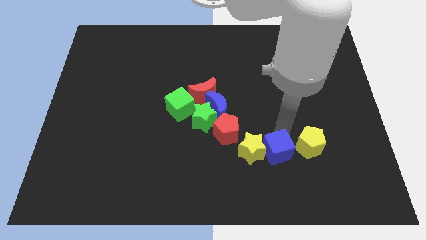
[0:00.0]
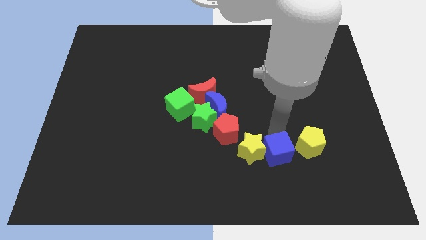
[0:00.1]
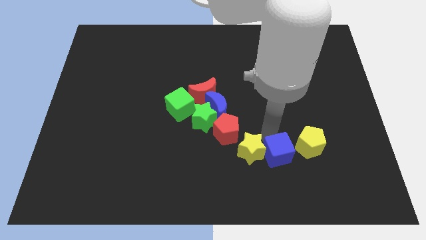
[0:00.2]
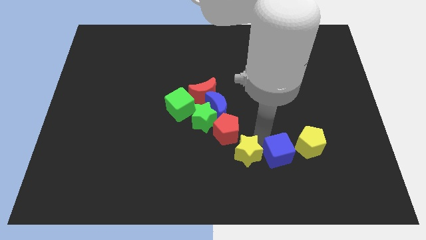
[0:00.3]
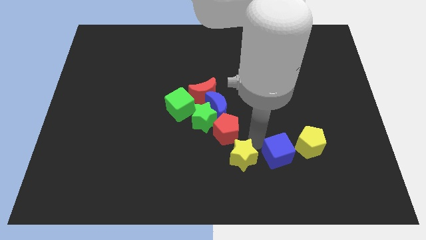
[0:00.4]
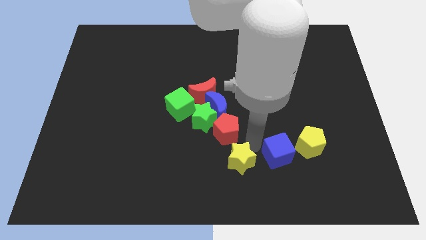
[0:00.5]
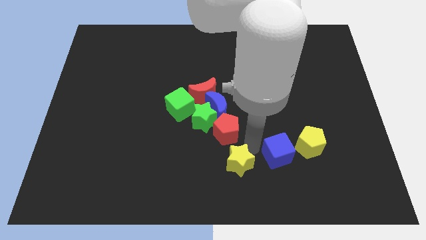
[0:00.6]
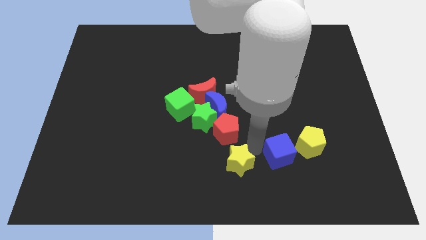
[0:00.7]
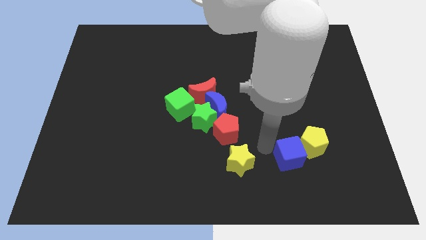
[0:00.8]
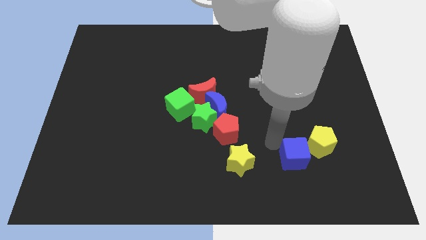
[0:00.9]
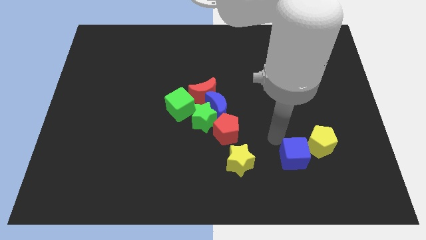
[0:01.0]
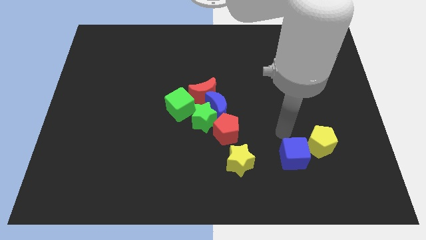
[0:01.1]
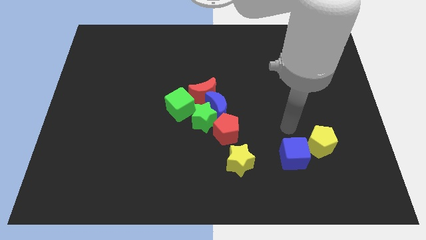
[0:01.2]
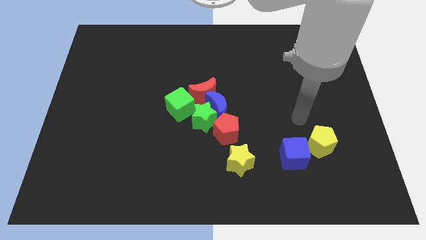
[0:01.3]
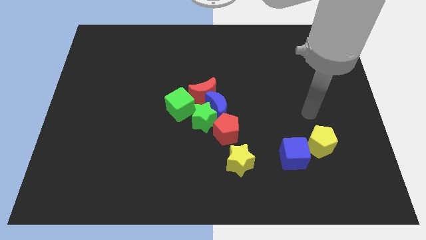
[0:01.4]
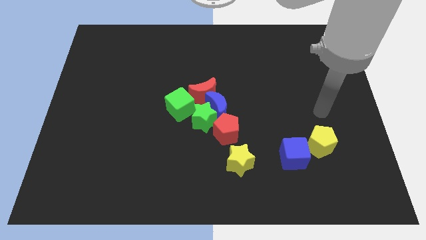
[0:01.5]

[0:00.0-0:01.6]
separate the blue cube and the yellow star

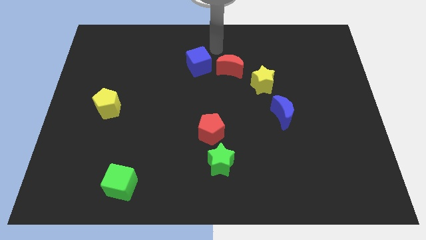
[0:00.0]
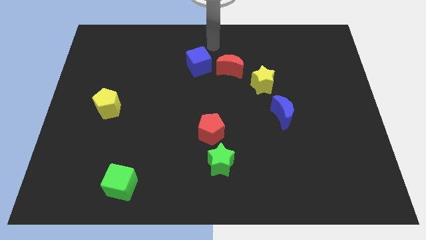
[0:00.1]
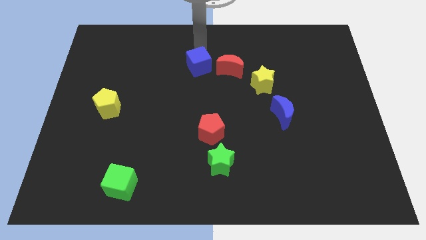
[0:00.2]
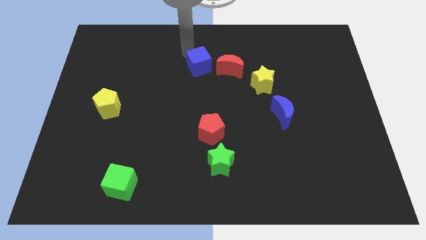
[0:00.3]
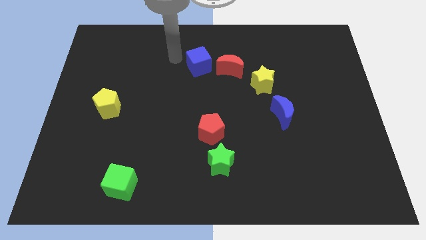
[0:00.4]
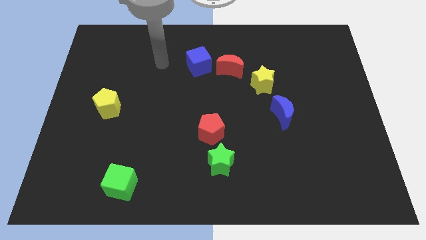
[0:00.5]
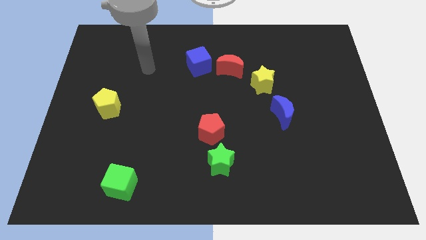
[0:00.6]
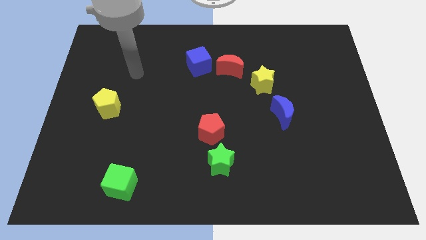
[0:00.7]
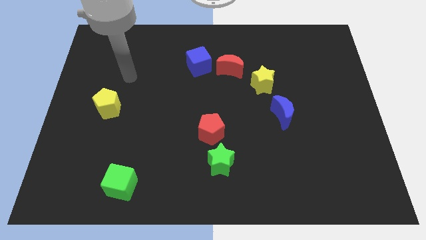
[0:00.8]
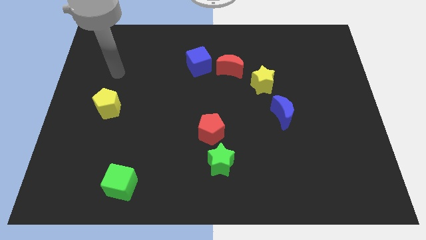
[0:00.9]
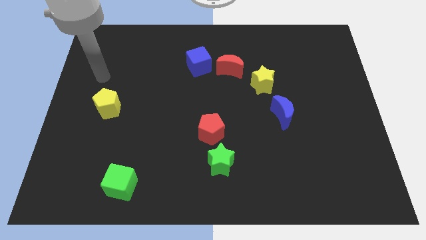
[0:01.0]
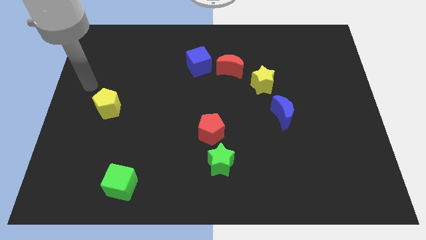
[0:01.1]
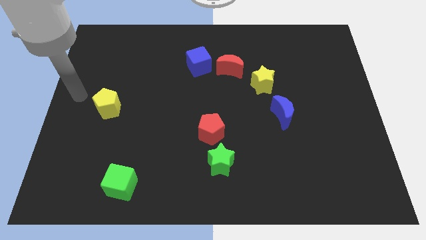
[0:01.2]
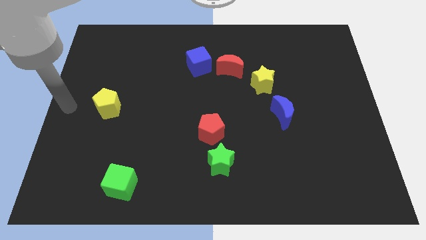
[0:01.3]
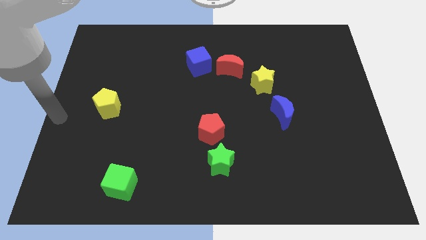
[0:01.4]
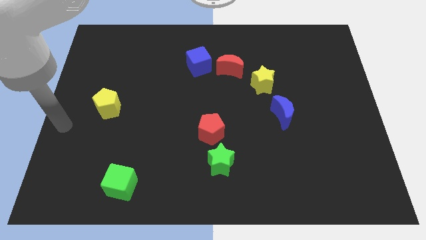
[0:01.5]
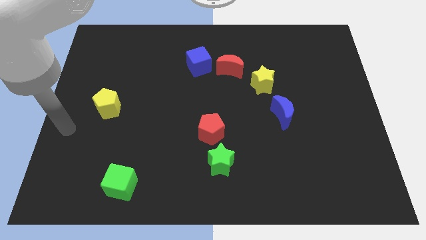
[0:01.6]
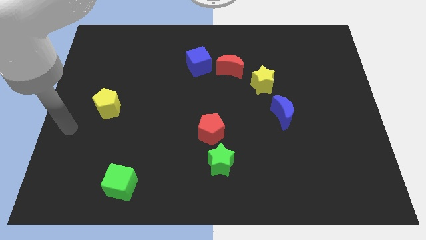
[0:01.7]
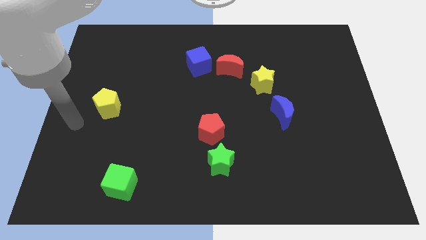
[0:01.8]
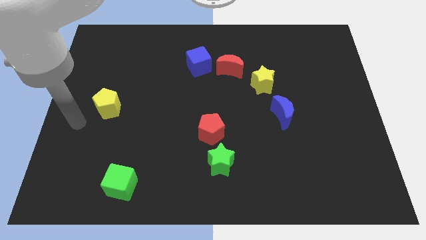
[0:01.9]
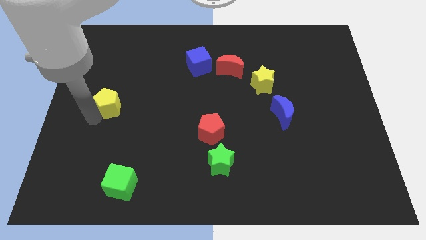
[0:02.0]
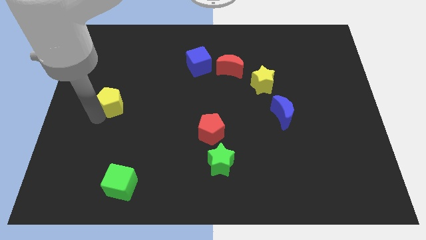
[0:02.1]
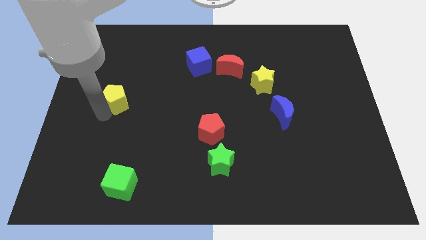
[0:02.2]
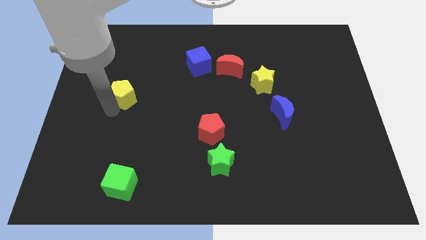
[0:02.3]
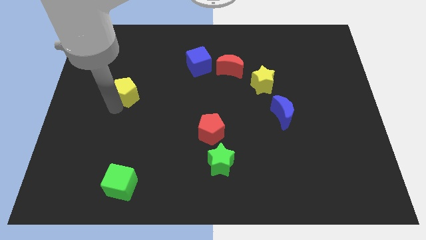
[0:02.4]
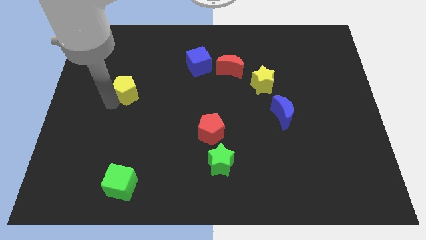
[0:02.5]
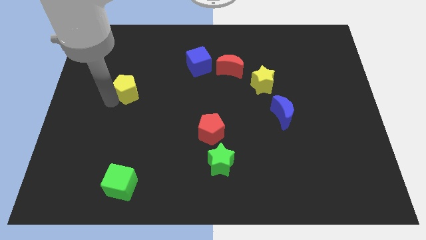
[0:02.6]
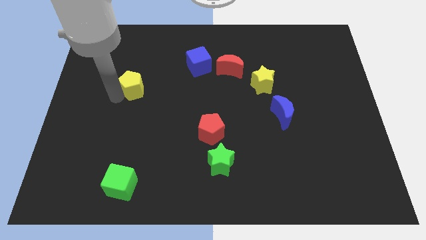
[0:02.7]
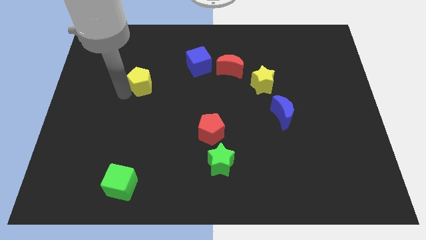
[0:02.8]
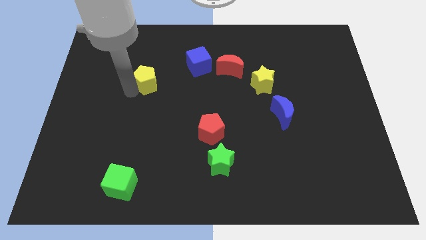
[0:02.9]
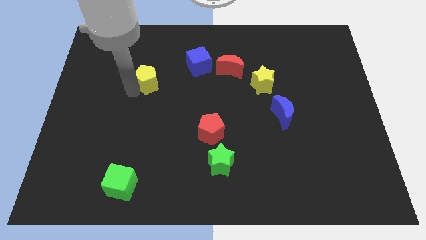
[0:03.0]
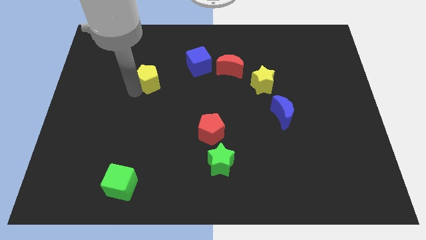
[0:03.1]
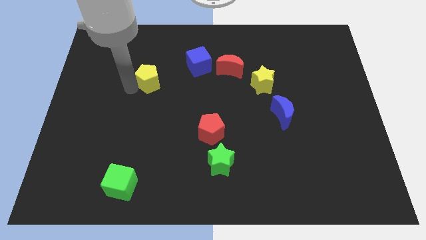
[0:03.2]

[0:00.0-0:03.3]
slide the yellow pentagon diagonal to the red pentagon

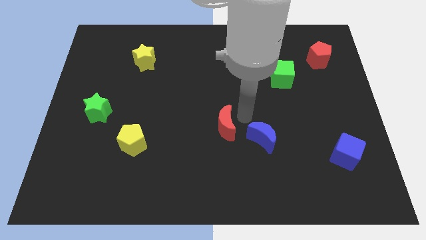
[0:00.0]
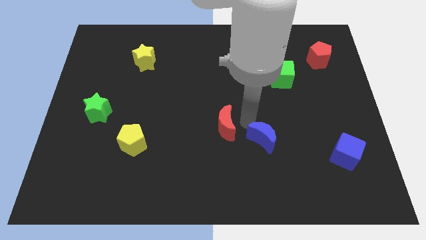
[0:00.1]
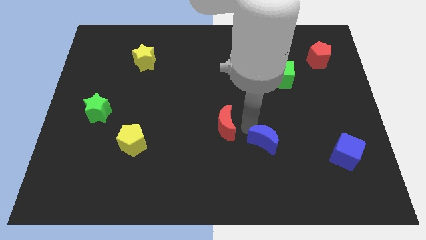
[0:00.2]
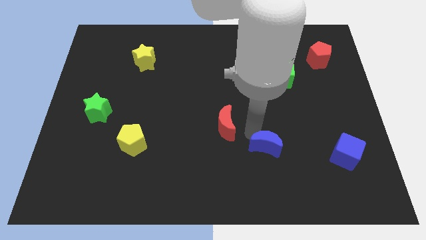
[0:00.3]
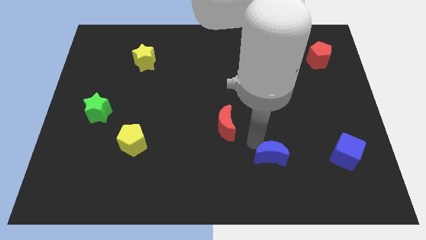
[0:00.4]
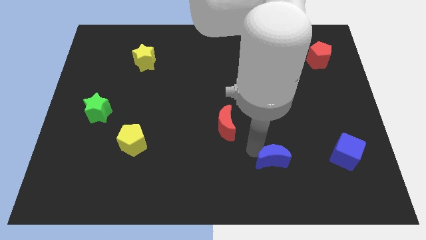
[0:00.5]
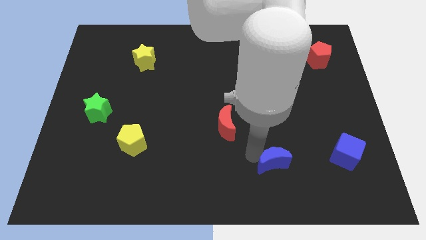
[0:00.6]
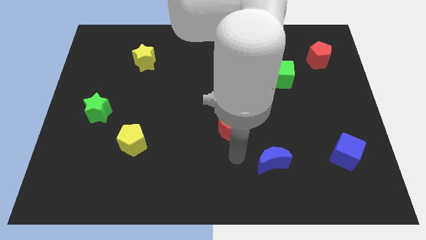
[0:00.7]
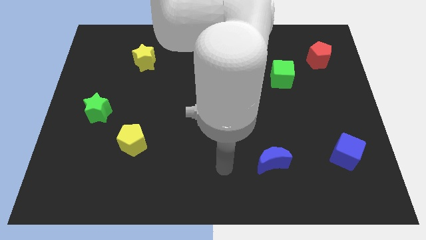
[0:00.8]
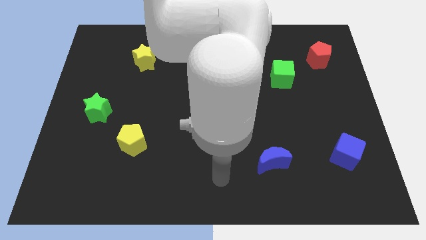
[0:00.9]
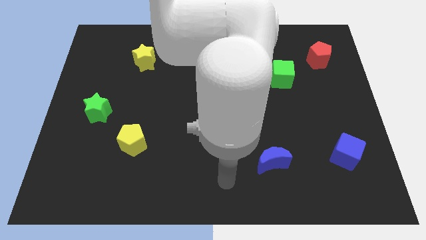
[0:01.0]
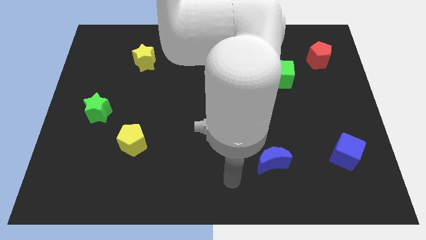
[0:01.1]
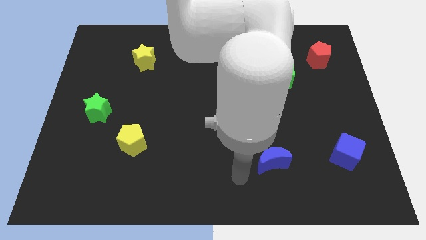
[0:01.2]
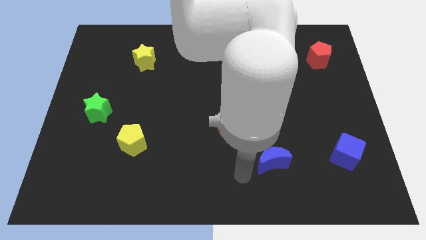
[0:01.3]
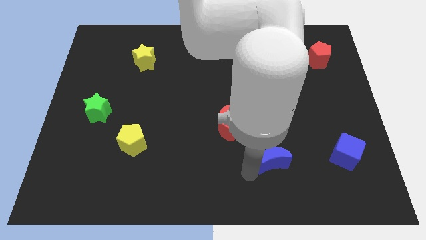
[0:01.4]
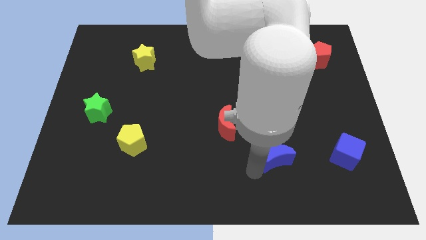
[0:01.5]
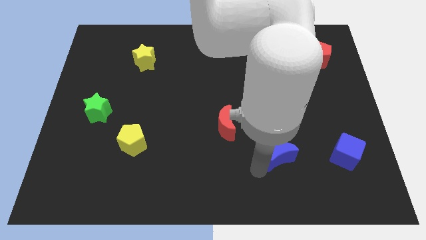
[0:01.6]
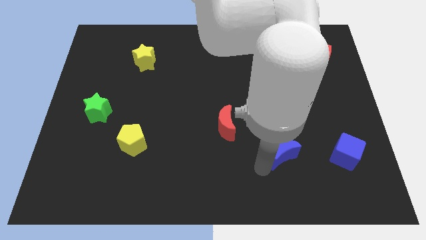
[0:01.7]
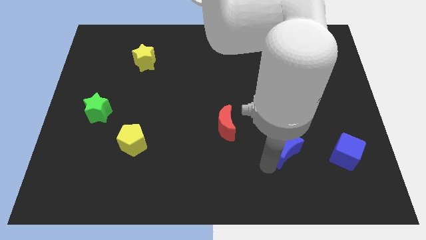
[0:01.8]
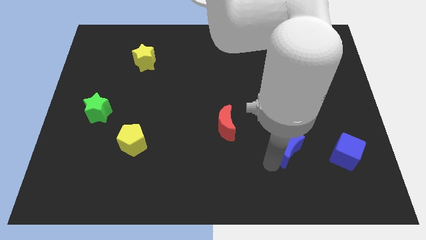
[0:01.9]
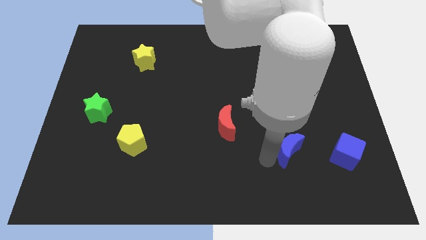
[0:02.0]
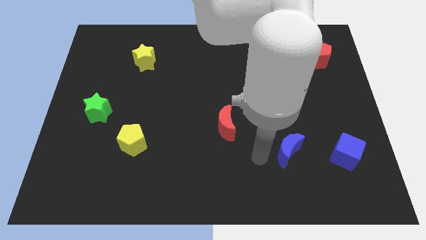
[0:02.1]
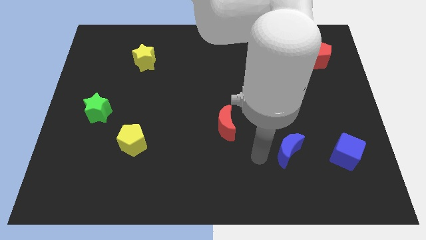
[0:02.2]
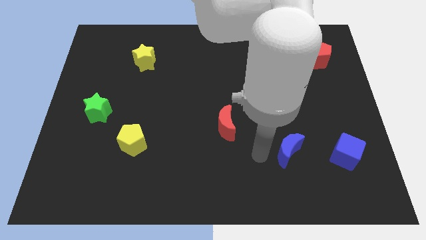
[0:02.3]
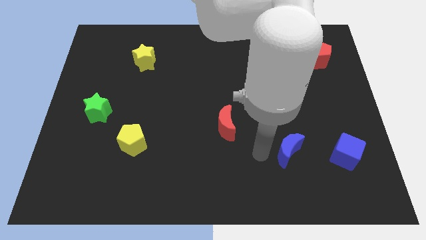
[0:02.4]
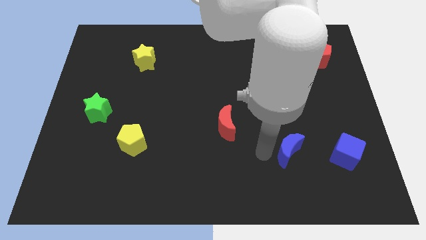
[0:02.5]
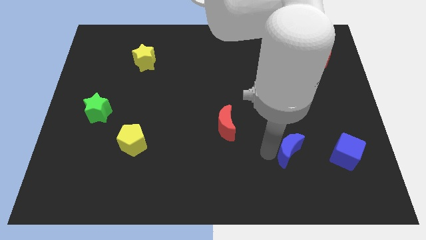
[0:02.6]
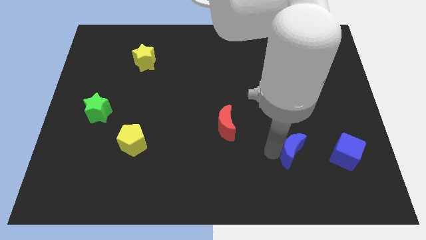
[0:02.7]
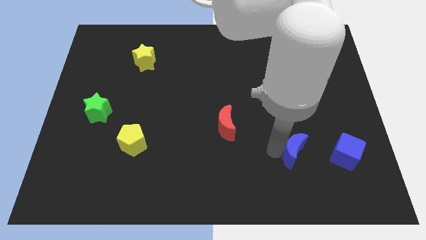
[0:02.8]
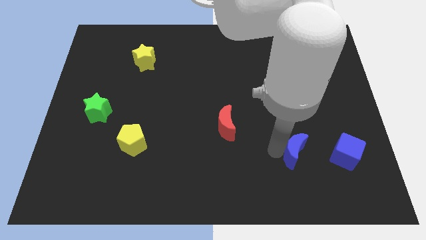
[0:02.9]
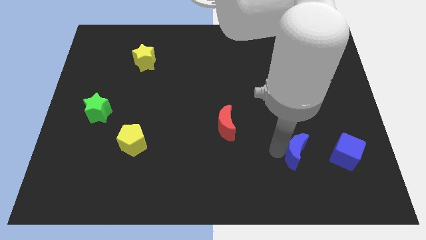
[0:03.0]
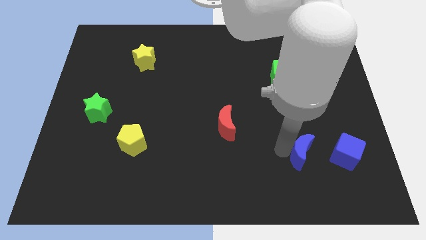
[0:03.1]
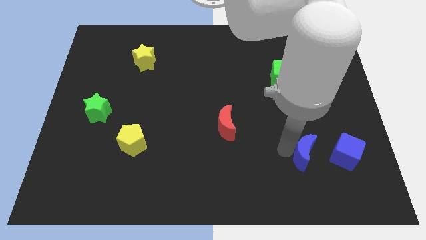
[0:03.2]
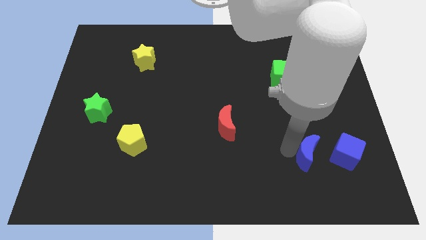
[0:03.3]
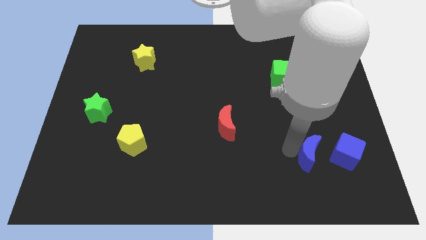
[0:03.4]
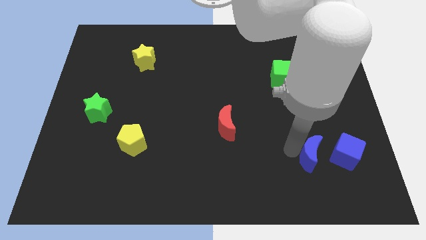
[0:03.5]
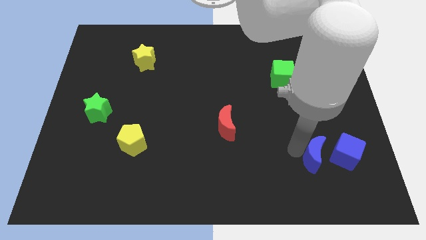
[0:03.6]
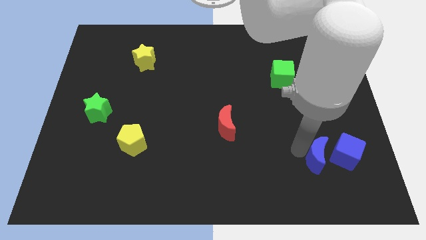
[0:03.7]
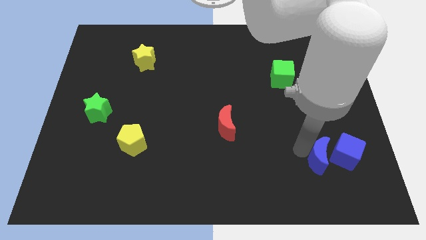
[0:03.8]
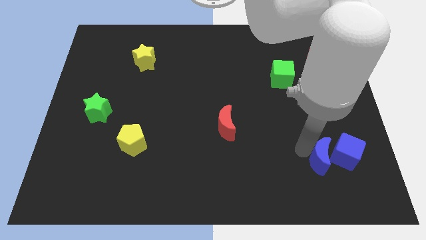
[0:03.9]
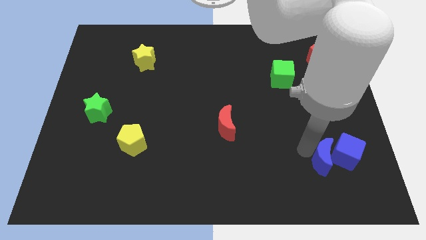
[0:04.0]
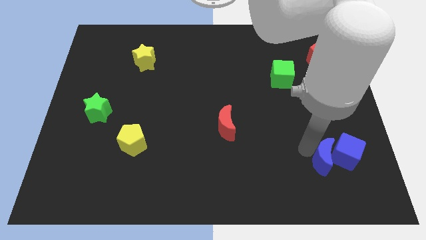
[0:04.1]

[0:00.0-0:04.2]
place the blue crescent to the left of cube
